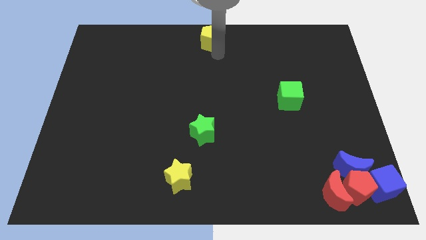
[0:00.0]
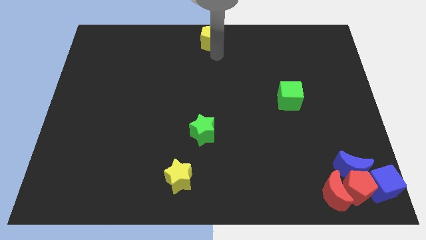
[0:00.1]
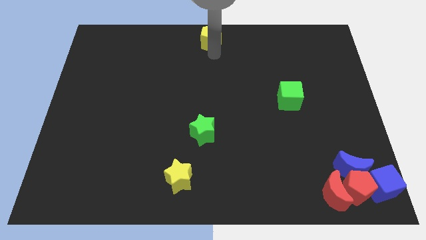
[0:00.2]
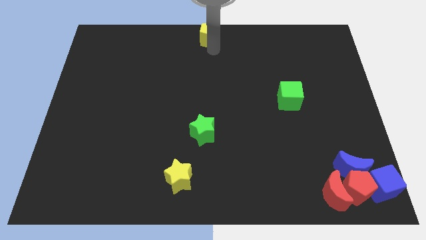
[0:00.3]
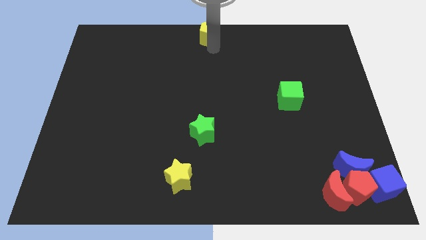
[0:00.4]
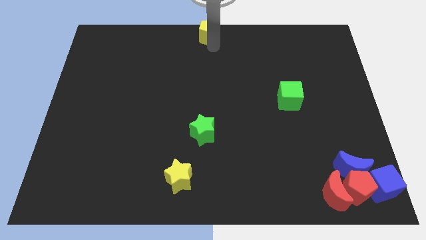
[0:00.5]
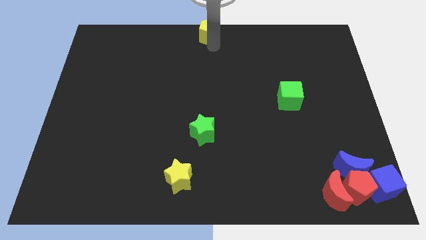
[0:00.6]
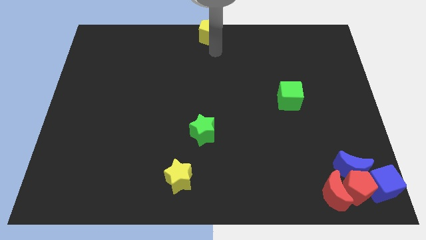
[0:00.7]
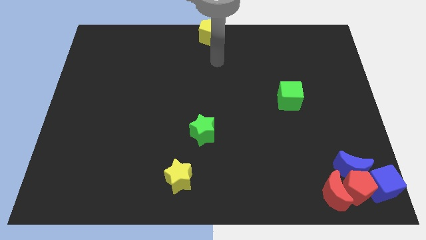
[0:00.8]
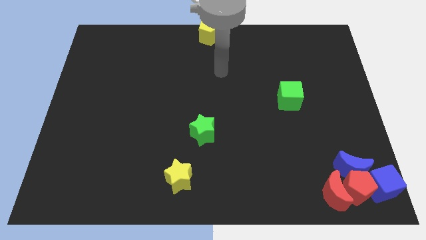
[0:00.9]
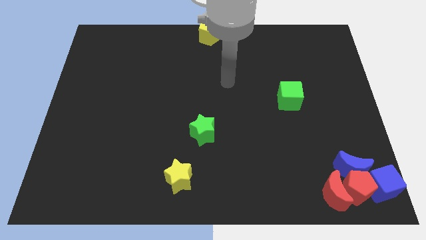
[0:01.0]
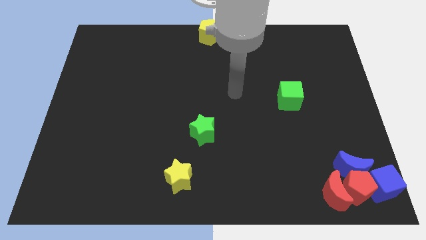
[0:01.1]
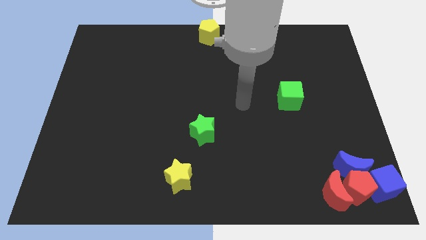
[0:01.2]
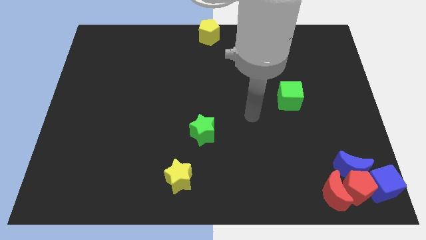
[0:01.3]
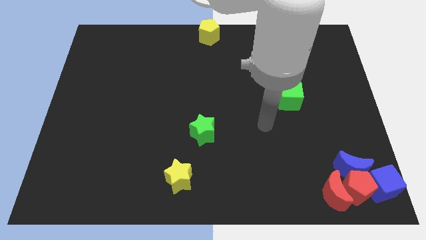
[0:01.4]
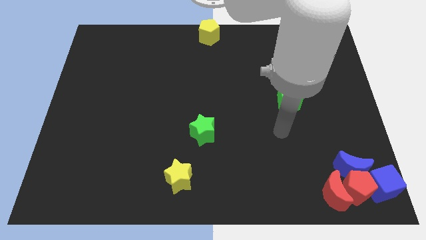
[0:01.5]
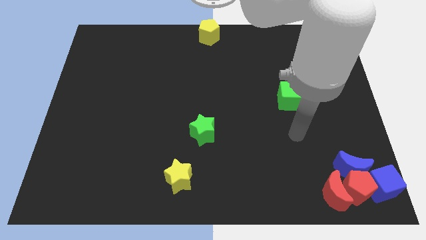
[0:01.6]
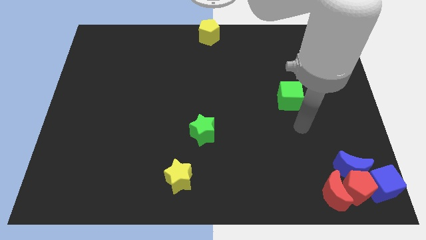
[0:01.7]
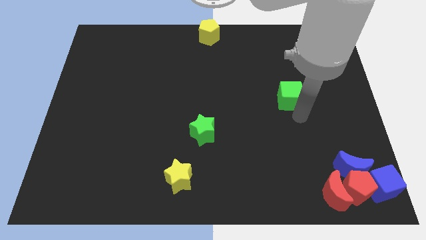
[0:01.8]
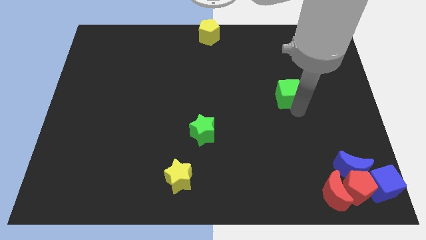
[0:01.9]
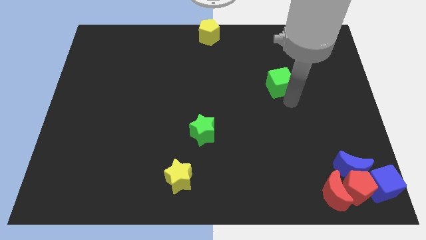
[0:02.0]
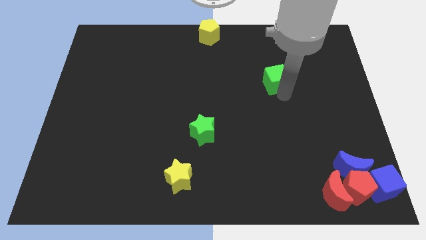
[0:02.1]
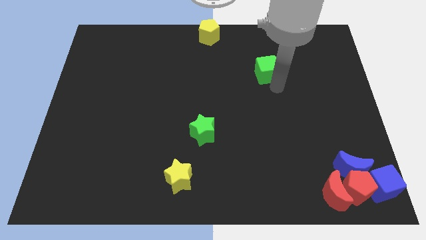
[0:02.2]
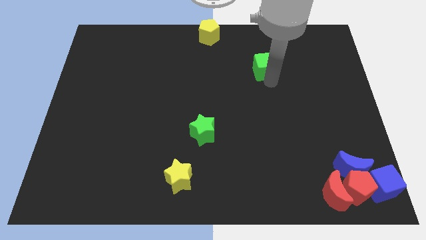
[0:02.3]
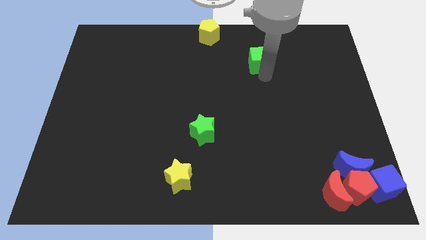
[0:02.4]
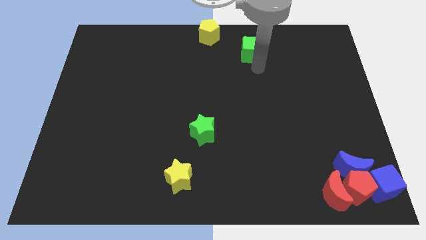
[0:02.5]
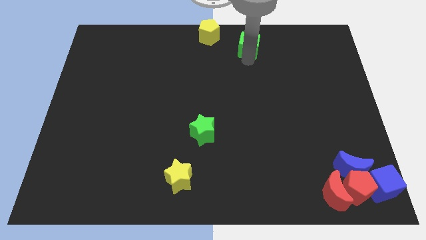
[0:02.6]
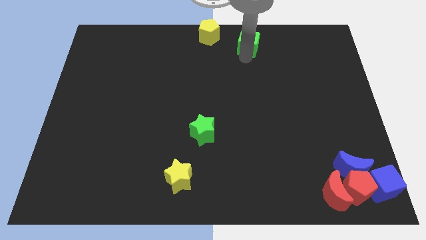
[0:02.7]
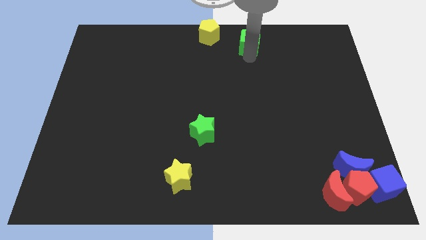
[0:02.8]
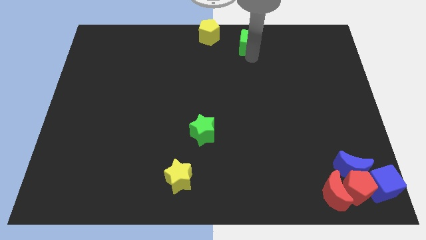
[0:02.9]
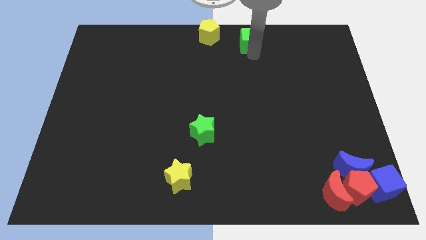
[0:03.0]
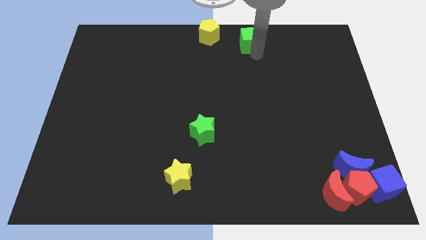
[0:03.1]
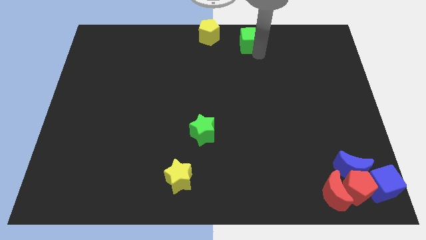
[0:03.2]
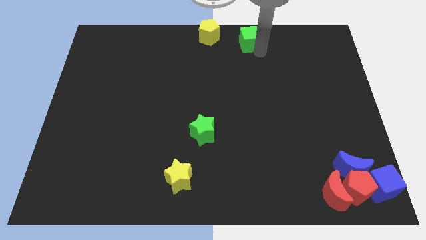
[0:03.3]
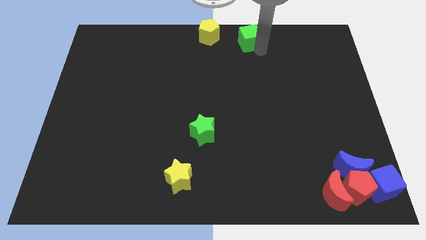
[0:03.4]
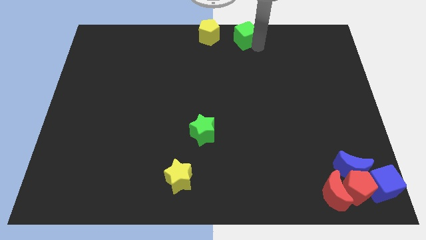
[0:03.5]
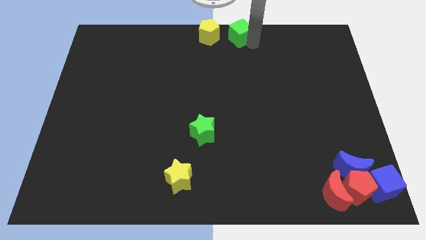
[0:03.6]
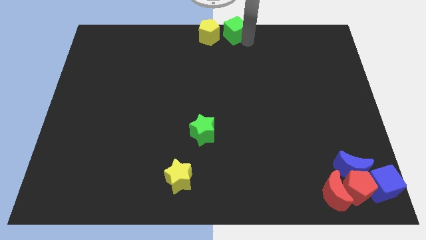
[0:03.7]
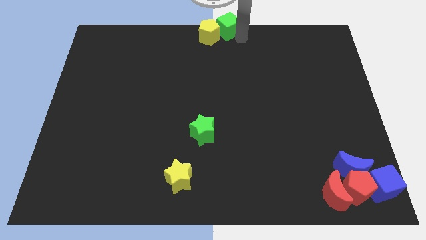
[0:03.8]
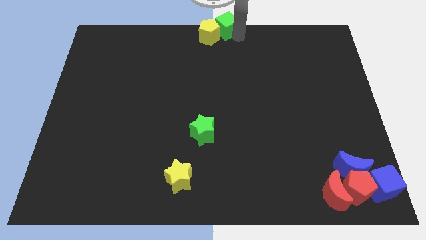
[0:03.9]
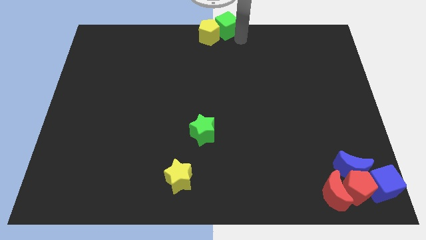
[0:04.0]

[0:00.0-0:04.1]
move green cube into yellow pentagon

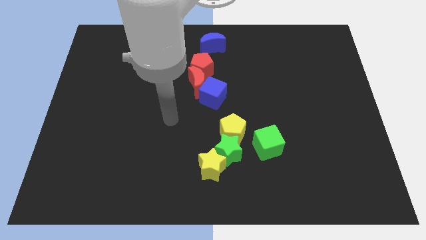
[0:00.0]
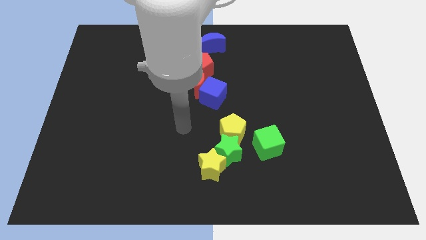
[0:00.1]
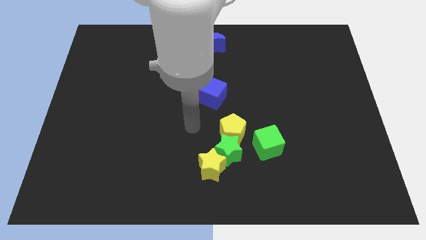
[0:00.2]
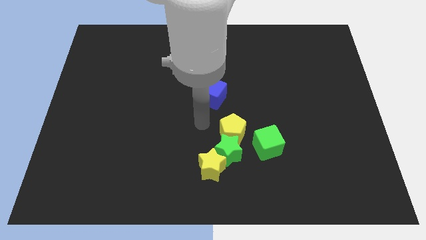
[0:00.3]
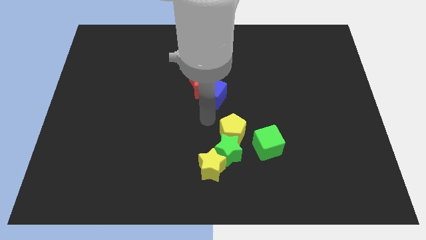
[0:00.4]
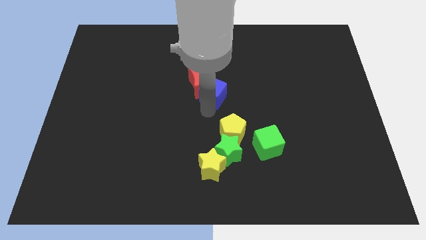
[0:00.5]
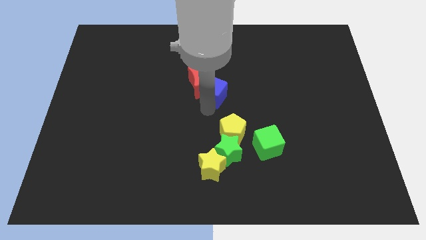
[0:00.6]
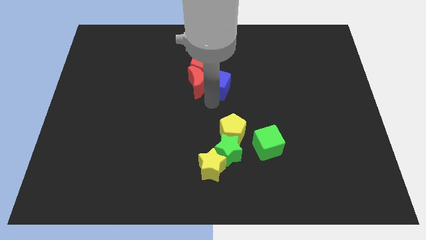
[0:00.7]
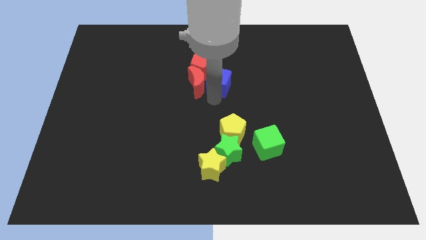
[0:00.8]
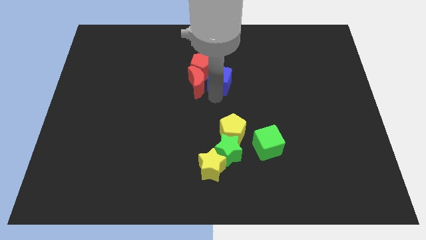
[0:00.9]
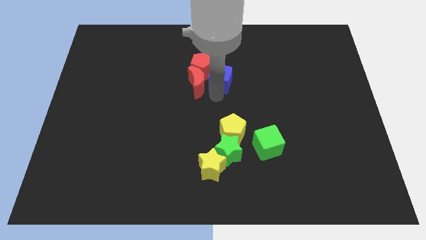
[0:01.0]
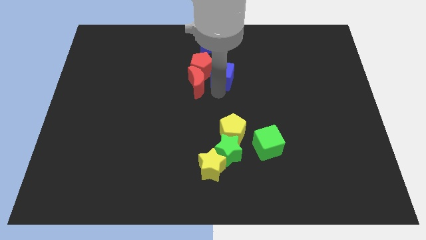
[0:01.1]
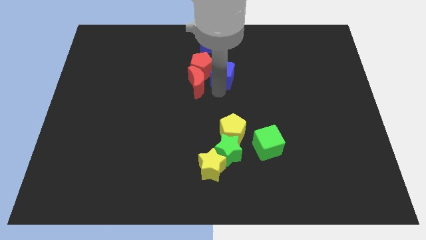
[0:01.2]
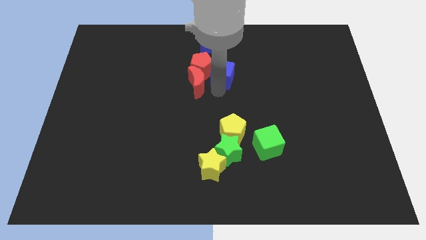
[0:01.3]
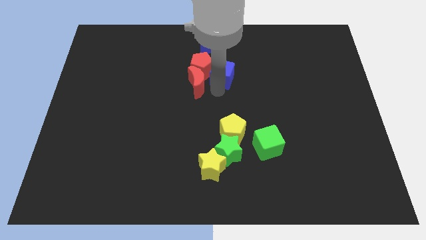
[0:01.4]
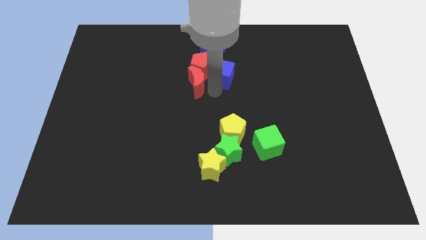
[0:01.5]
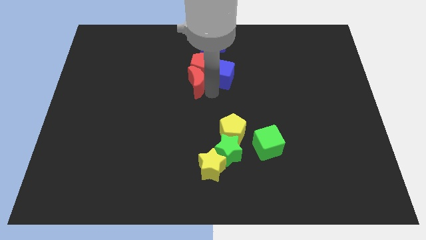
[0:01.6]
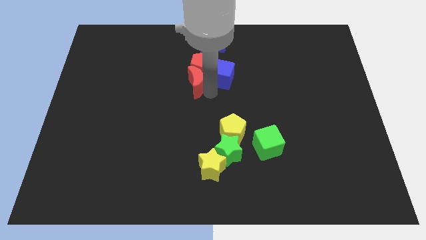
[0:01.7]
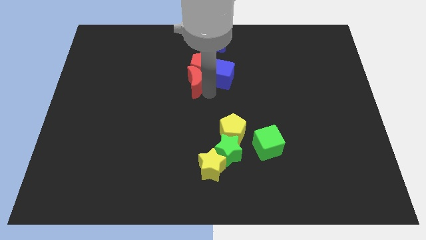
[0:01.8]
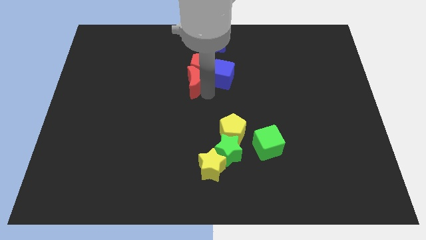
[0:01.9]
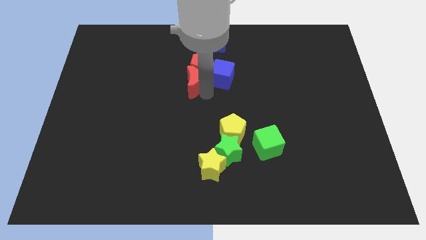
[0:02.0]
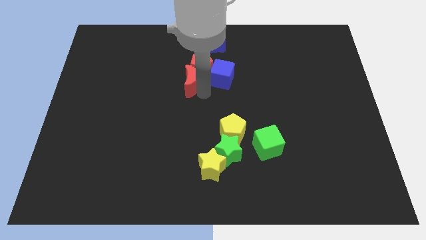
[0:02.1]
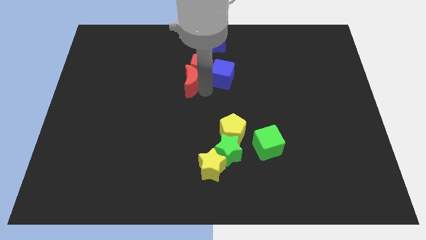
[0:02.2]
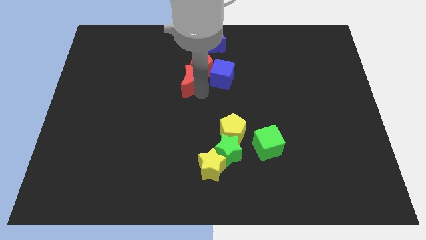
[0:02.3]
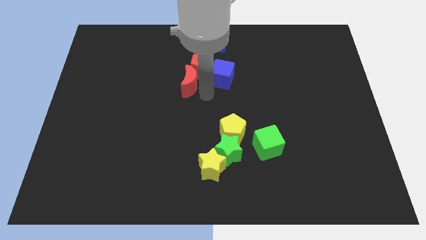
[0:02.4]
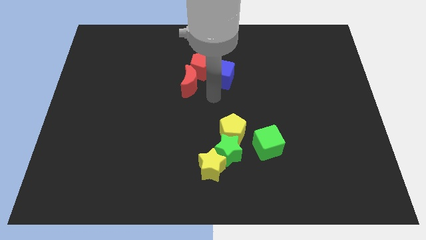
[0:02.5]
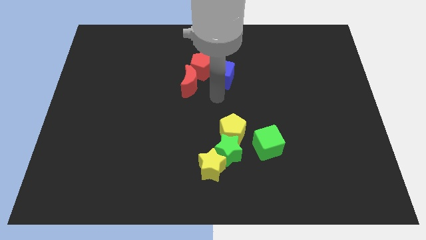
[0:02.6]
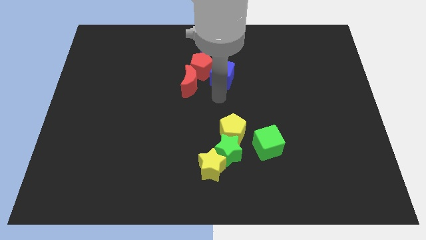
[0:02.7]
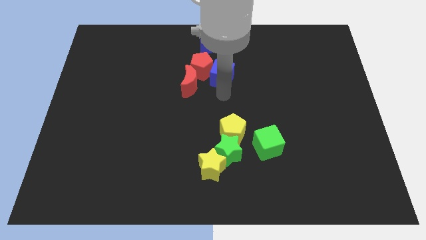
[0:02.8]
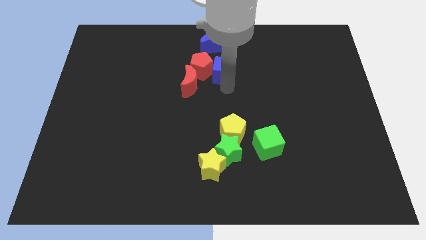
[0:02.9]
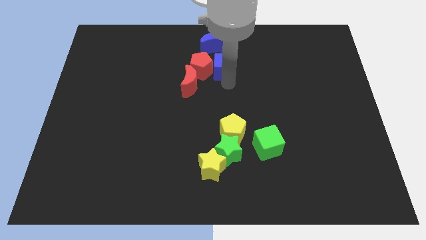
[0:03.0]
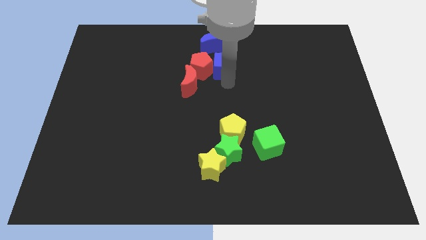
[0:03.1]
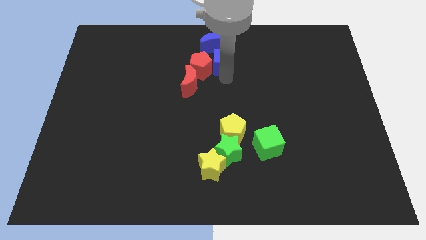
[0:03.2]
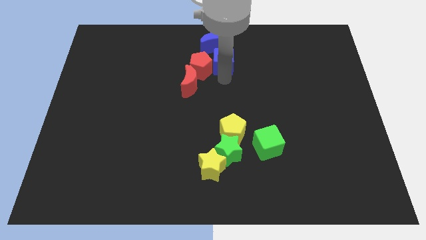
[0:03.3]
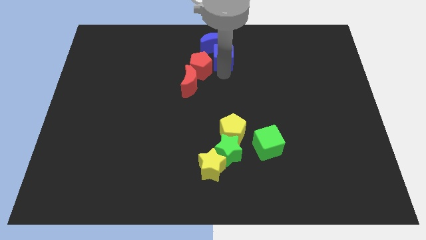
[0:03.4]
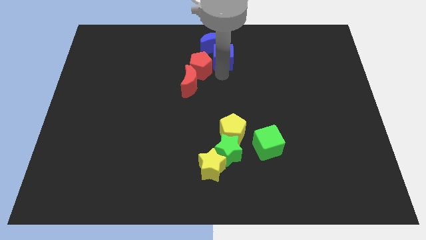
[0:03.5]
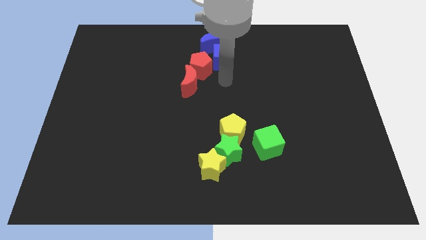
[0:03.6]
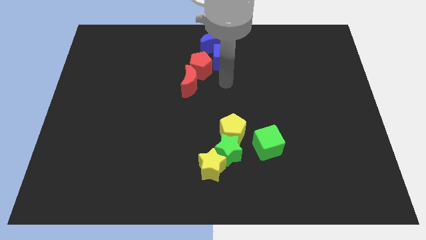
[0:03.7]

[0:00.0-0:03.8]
slide the blue cube towards the top center

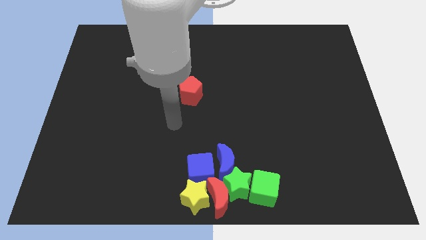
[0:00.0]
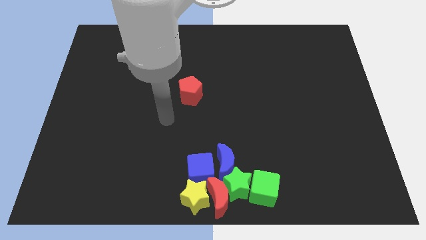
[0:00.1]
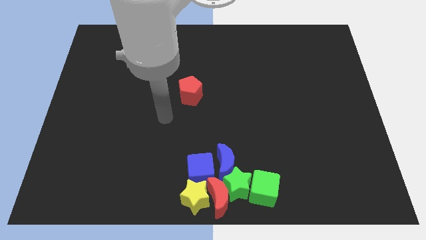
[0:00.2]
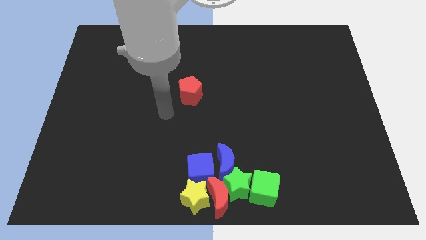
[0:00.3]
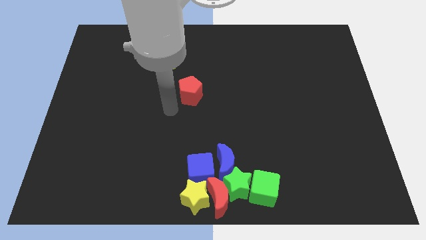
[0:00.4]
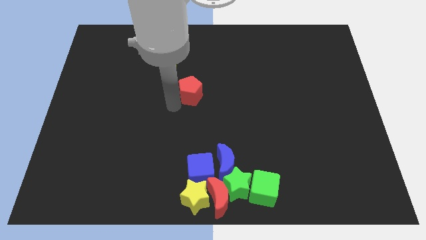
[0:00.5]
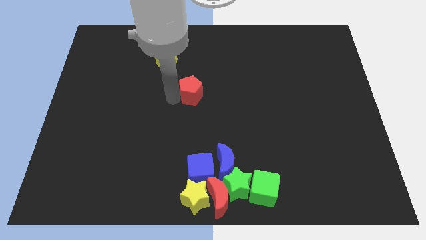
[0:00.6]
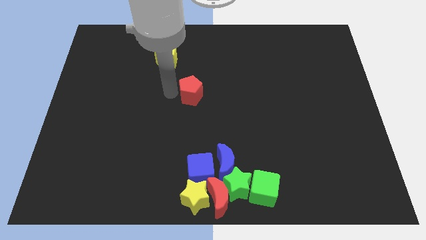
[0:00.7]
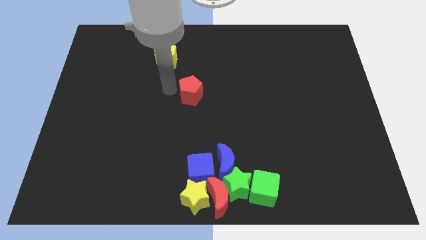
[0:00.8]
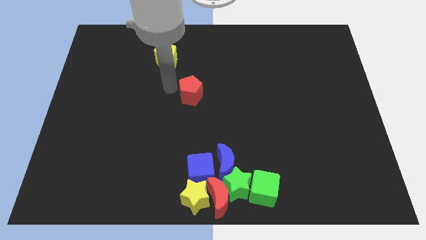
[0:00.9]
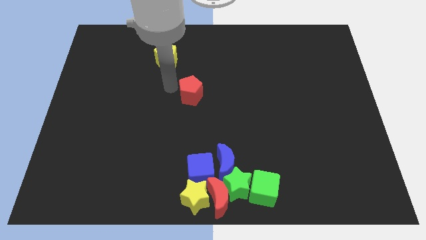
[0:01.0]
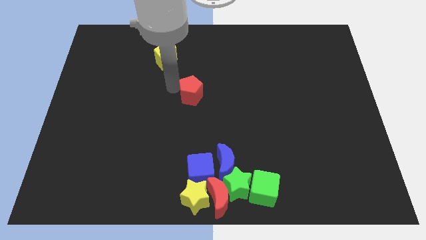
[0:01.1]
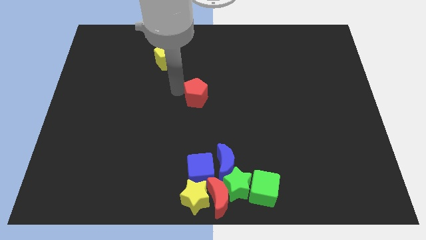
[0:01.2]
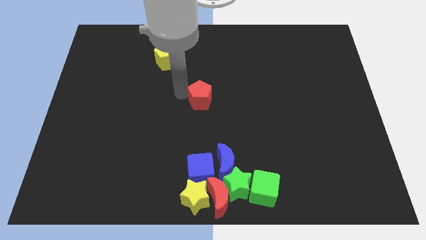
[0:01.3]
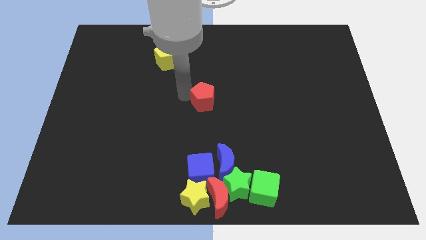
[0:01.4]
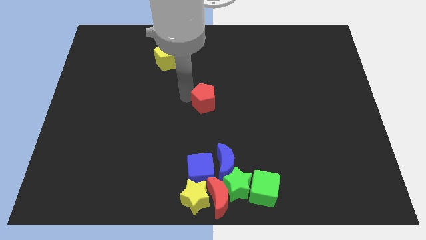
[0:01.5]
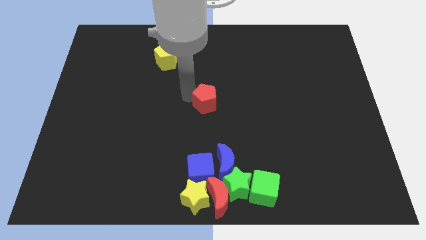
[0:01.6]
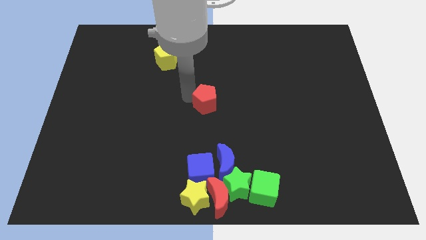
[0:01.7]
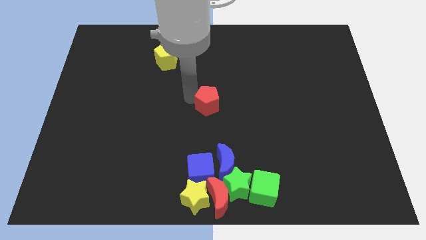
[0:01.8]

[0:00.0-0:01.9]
move the red pentagon to the center of the board
